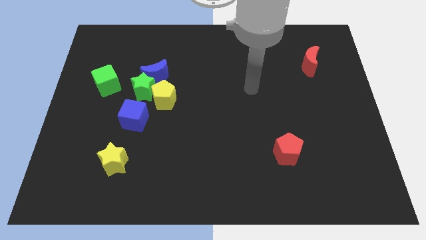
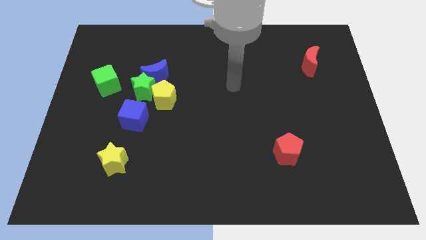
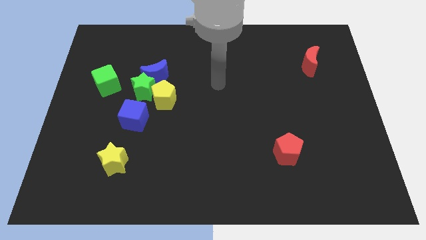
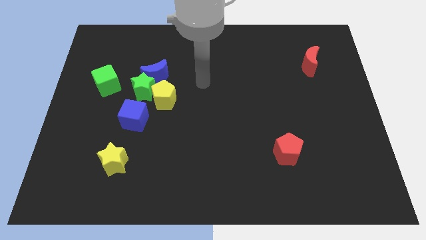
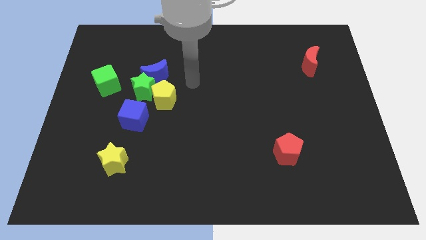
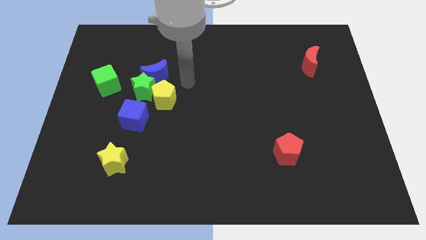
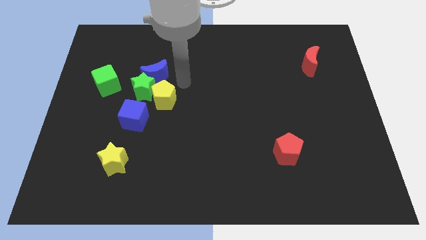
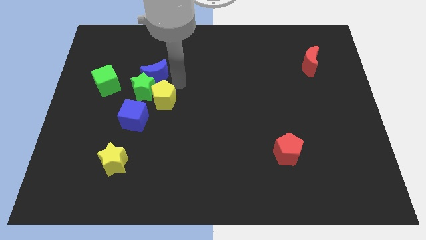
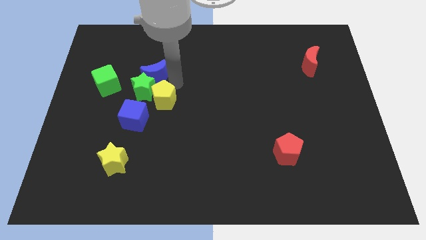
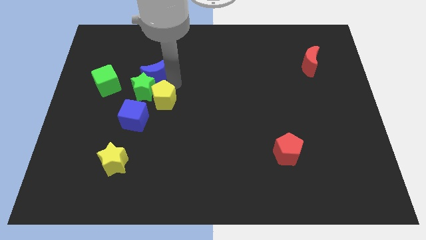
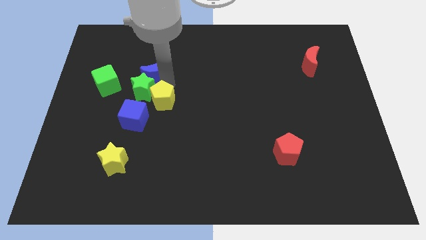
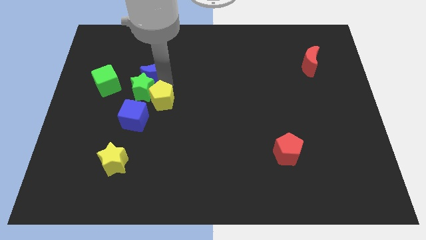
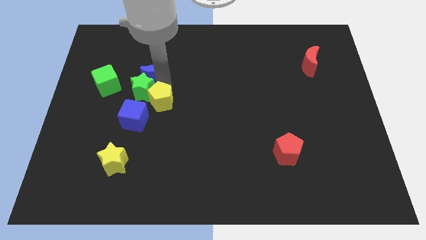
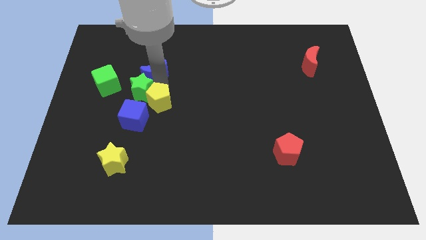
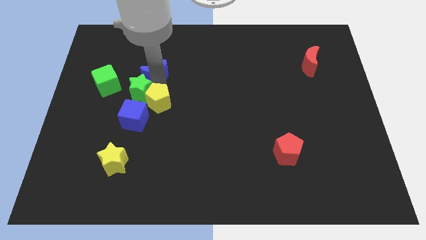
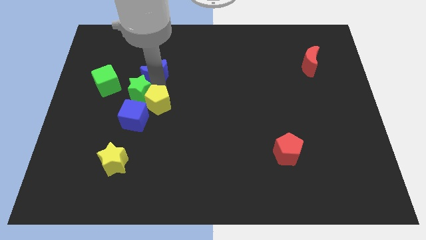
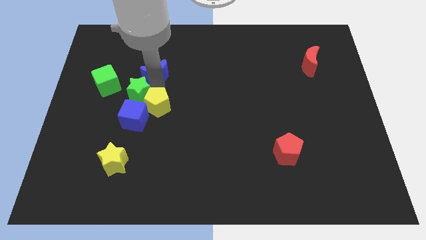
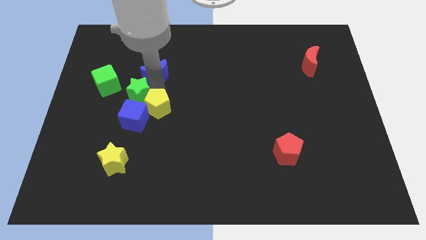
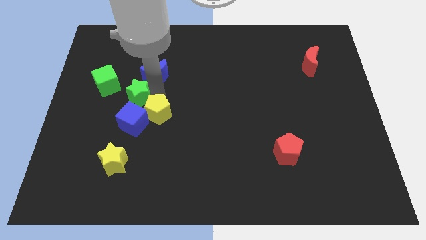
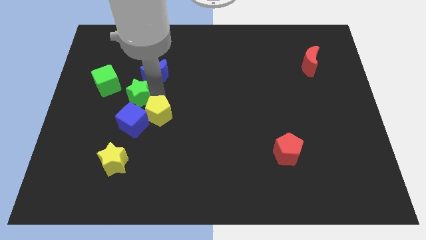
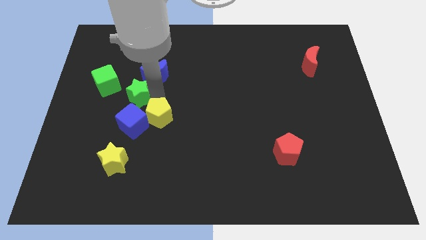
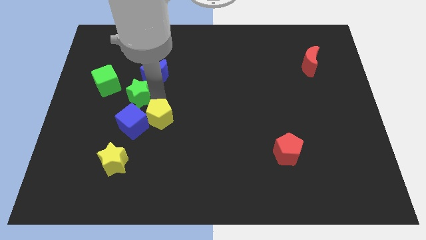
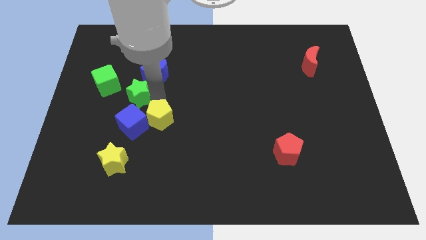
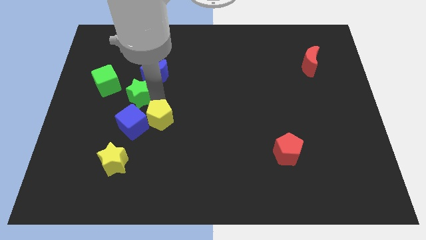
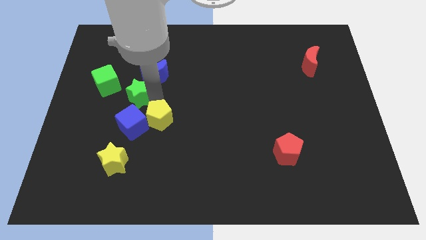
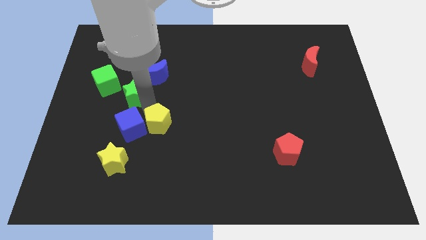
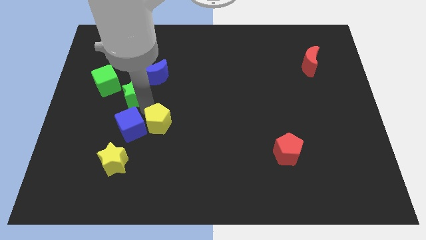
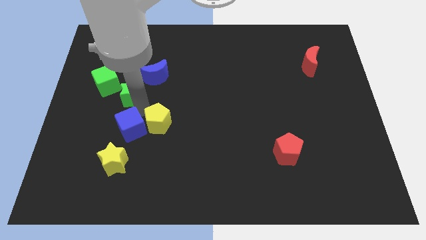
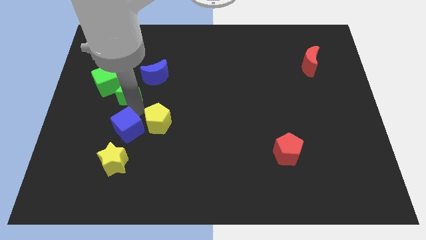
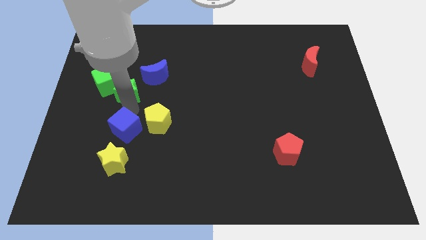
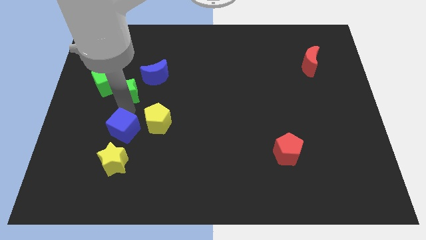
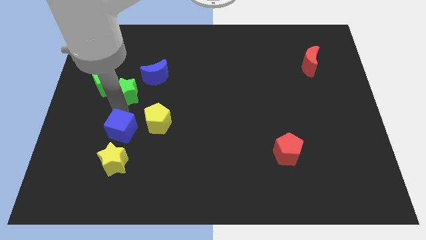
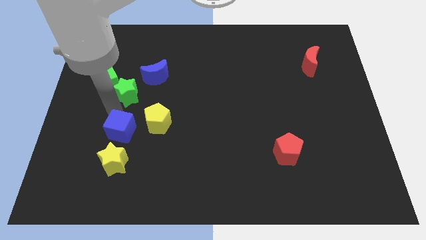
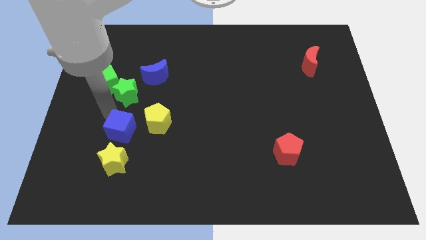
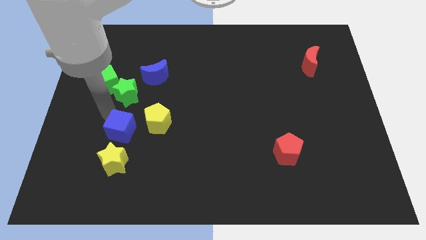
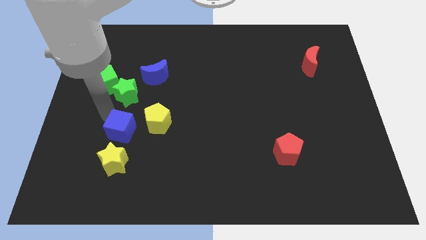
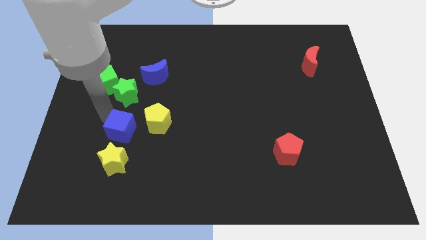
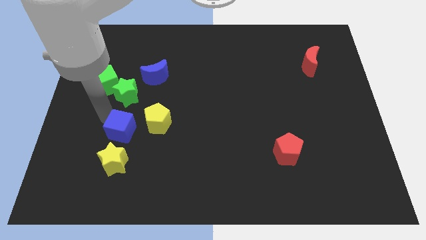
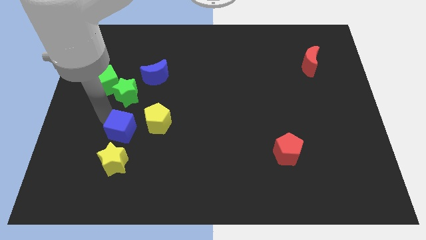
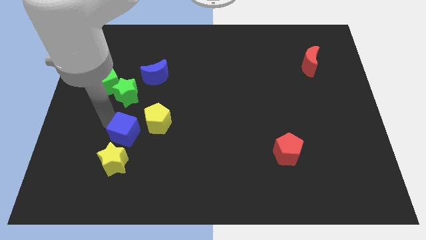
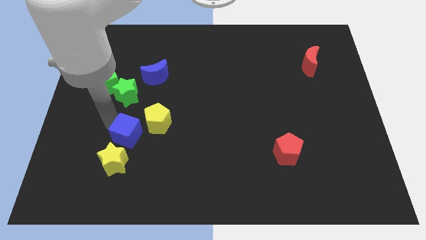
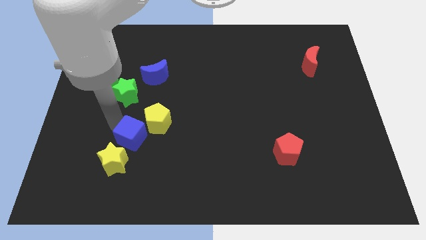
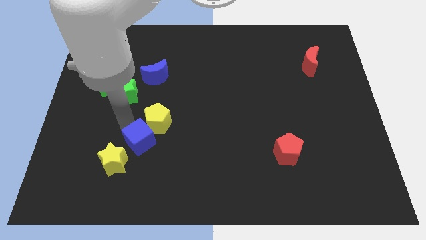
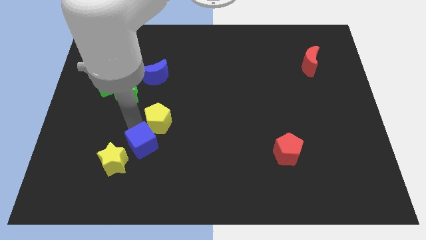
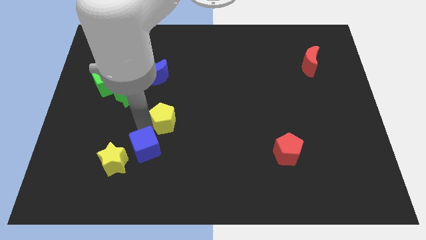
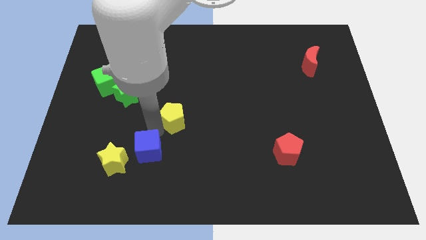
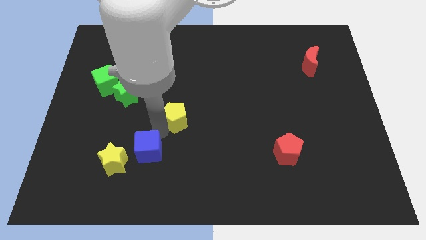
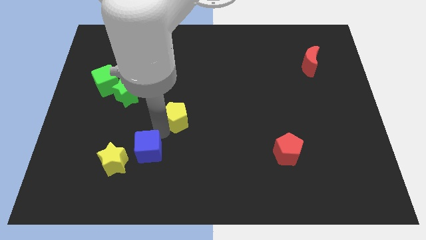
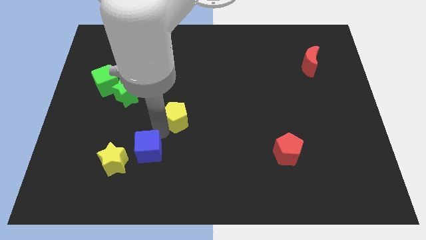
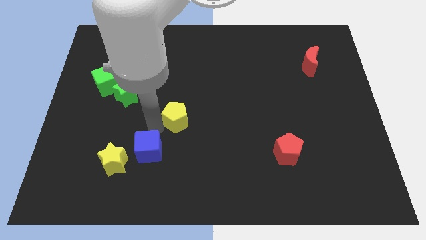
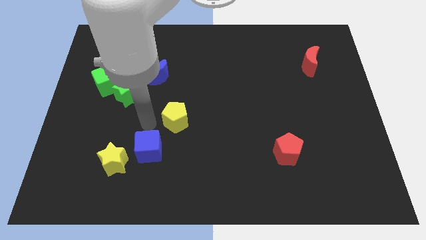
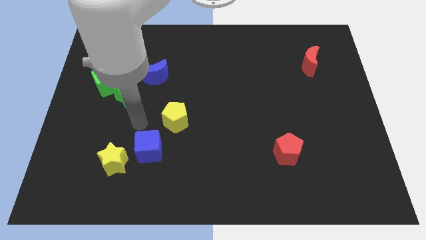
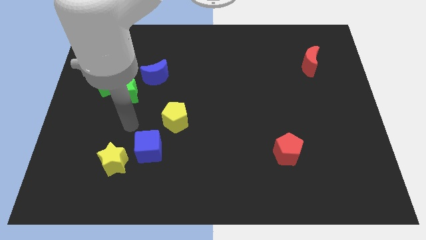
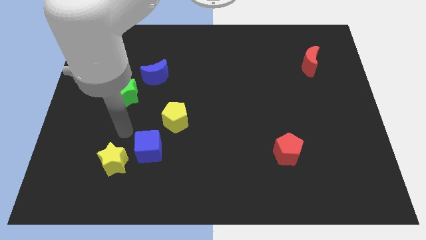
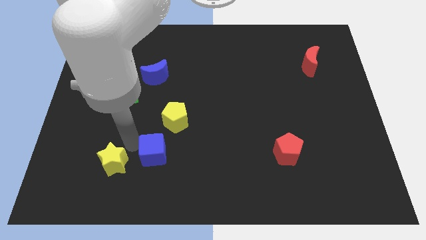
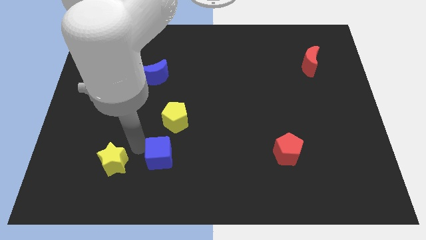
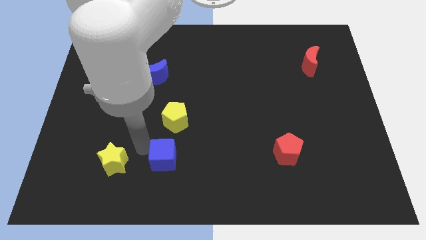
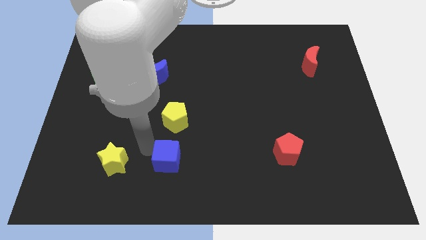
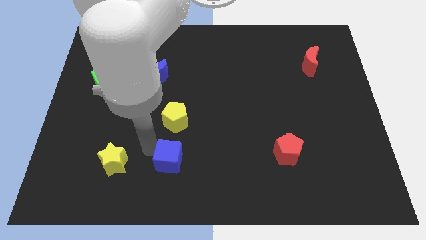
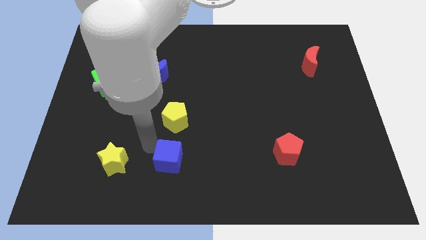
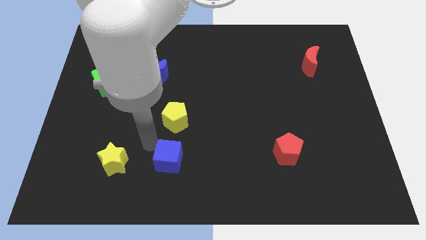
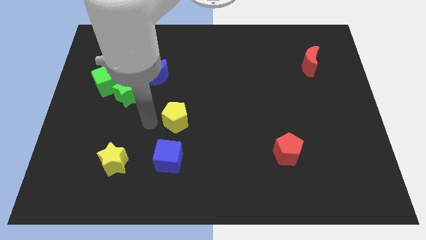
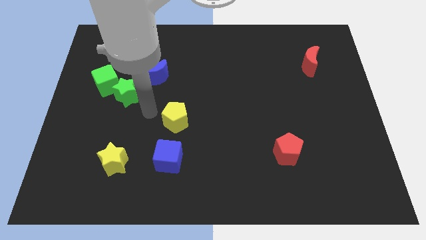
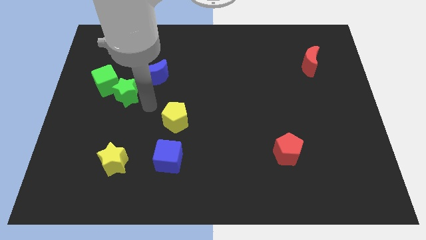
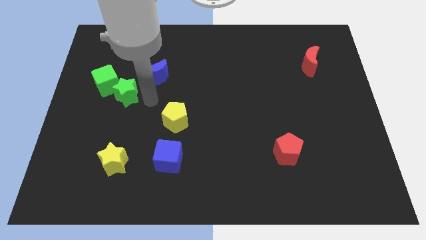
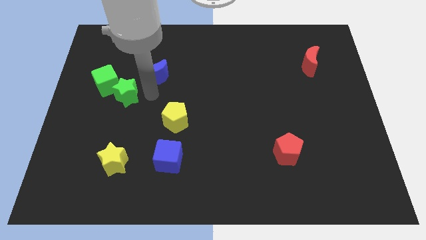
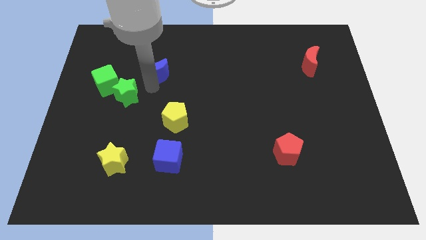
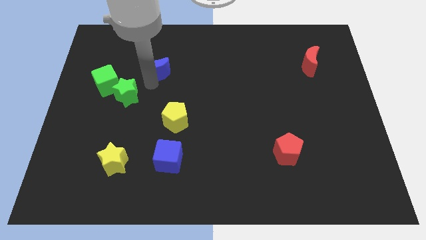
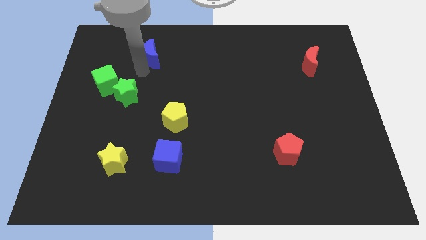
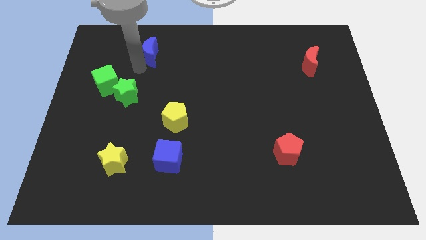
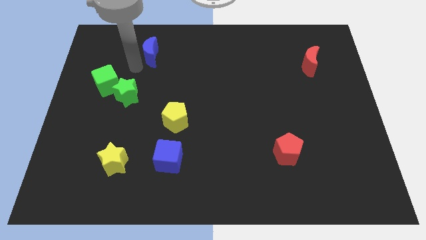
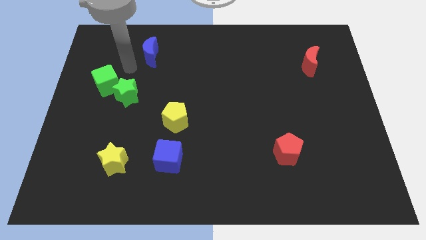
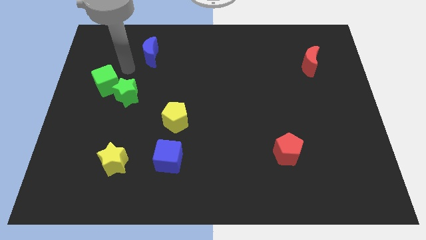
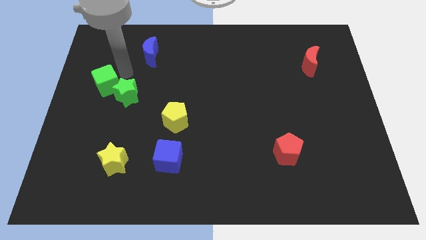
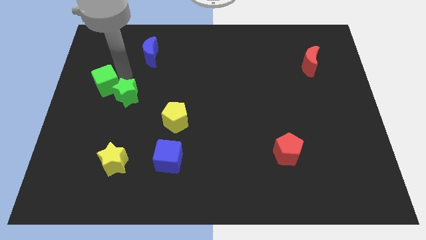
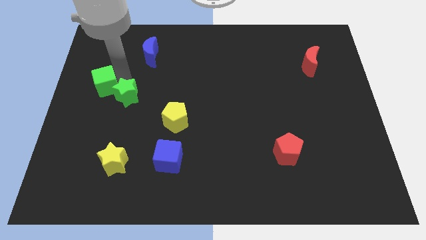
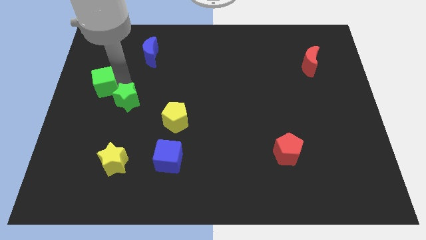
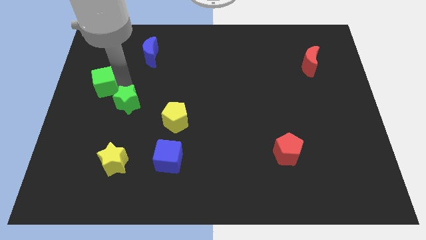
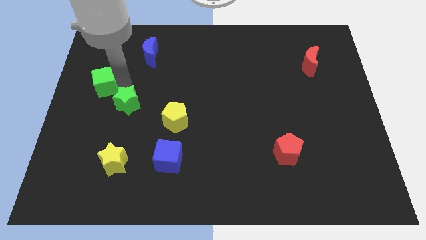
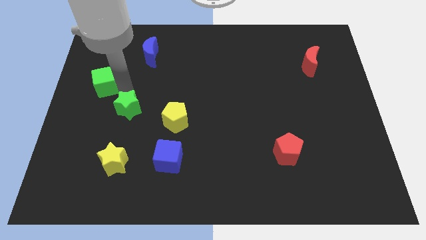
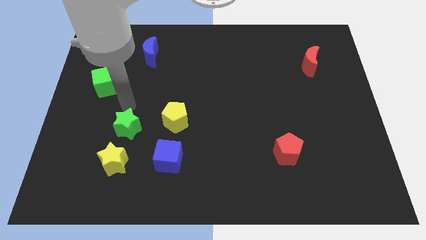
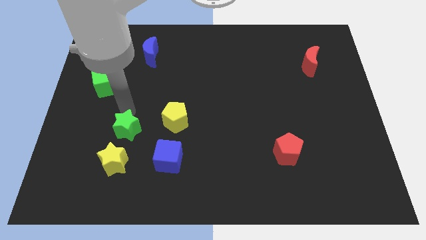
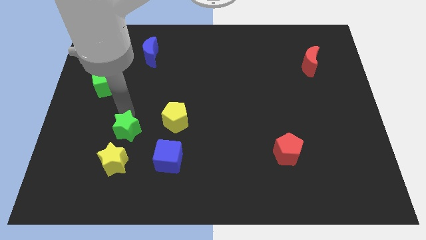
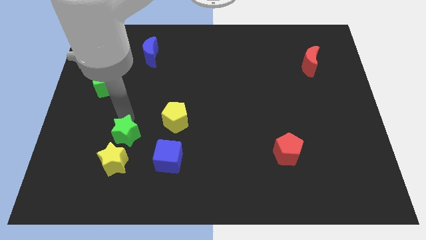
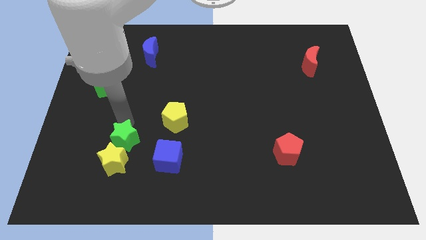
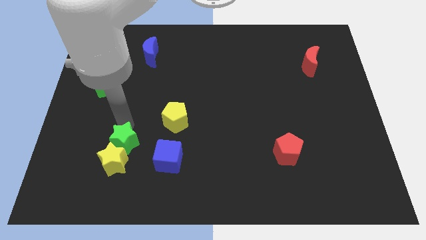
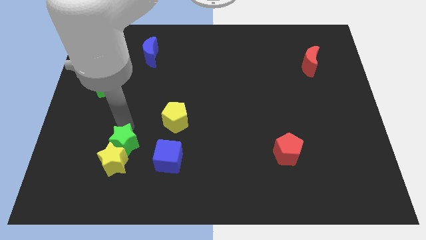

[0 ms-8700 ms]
move the green star to the yellow star
